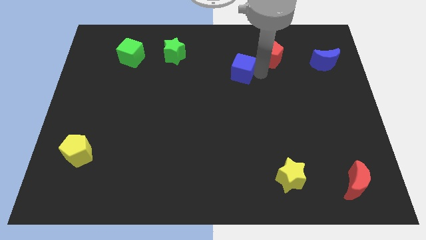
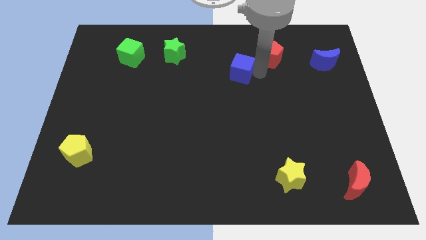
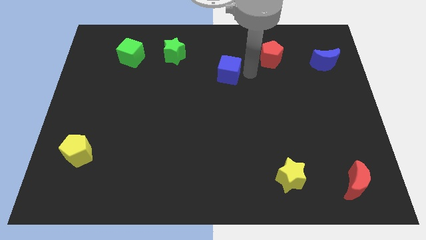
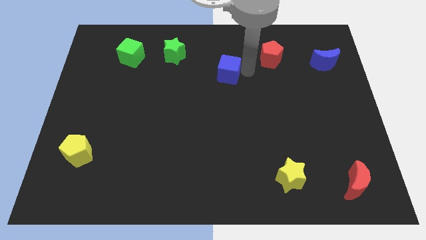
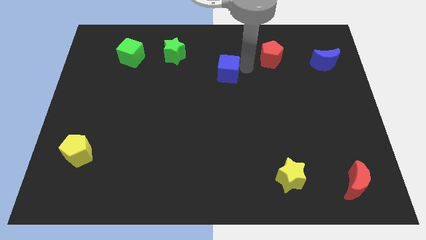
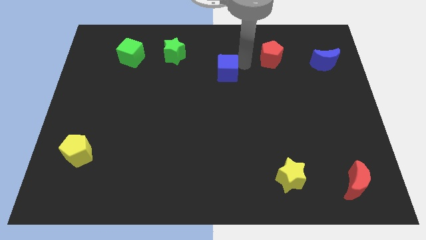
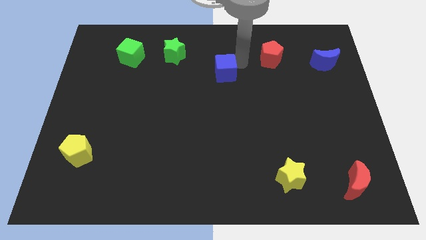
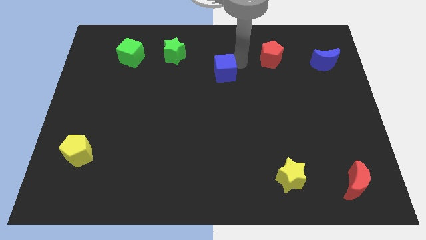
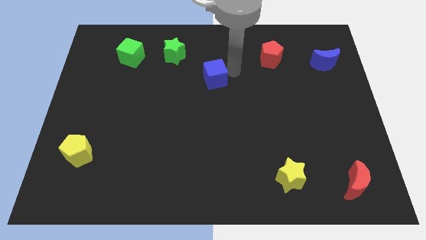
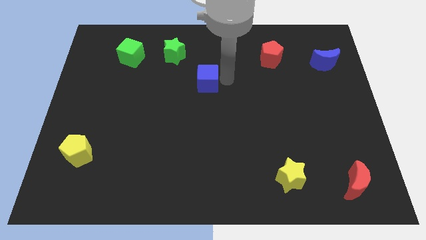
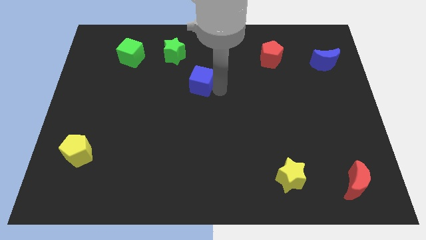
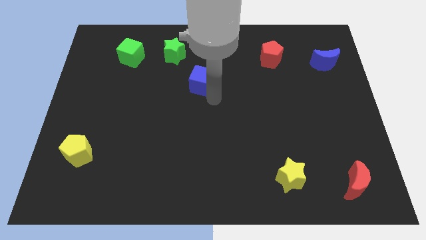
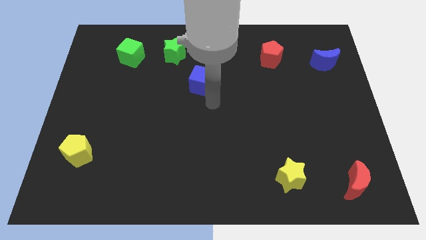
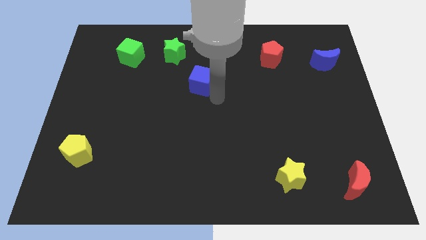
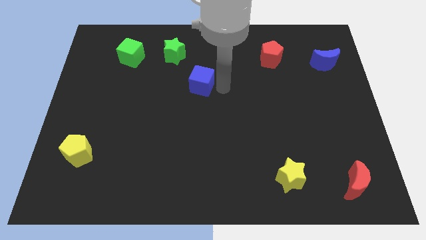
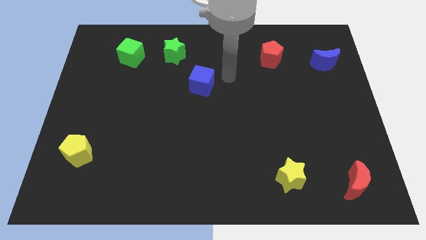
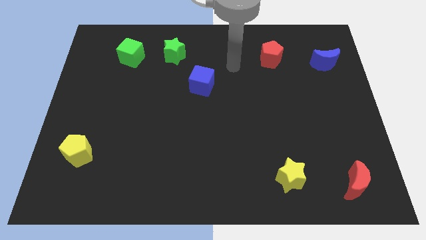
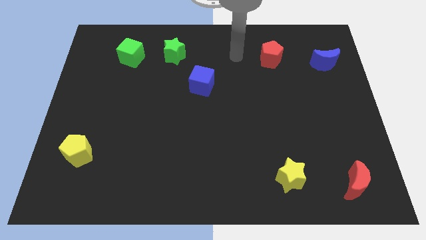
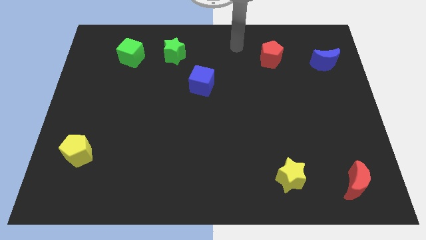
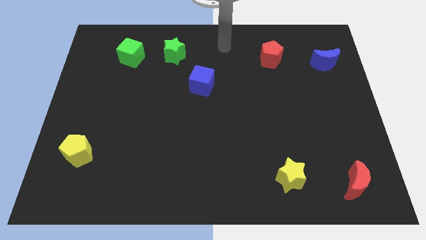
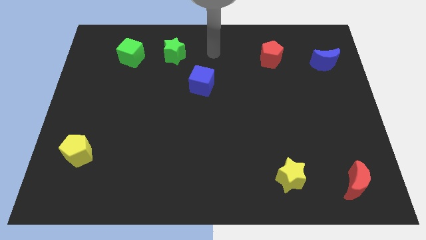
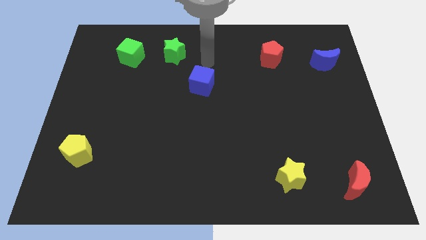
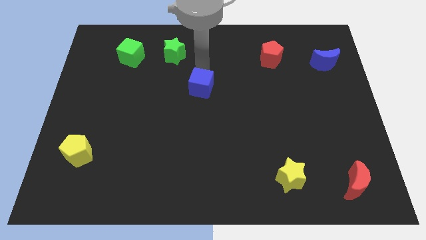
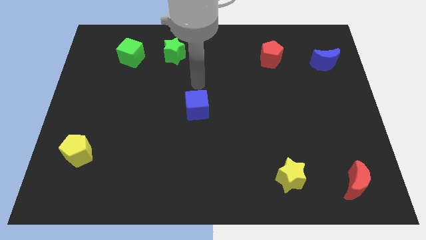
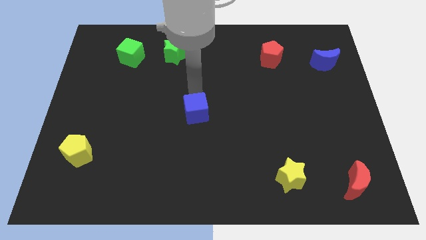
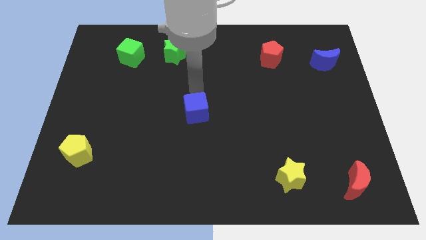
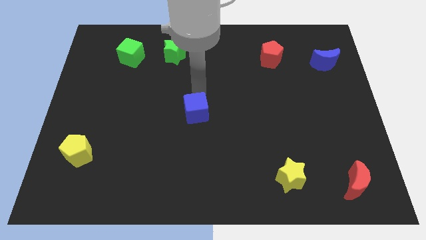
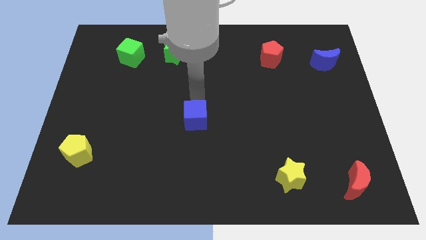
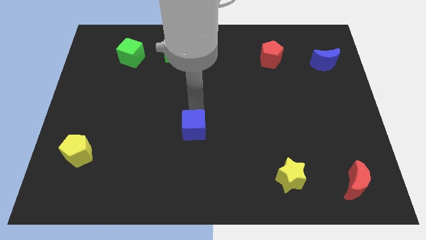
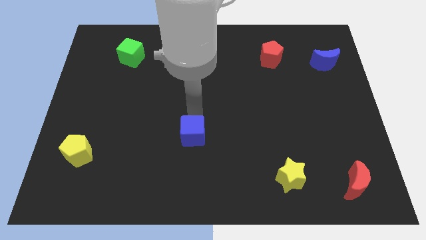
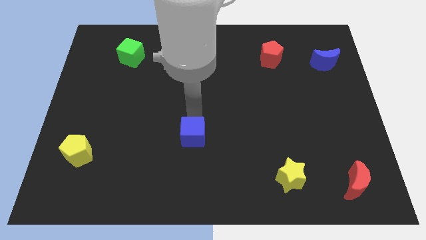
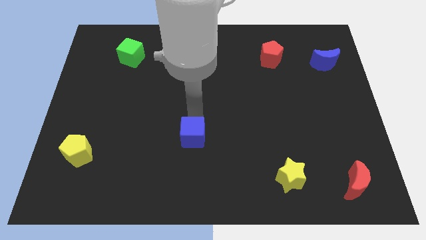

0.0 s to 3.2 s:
push the blue cube to the center of the board

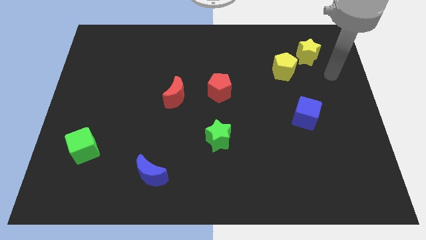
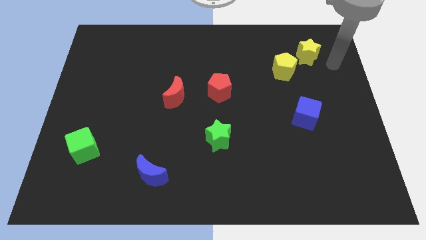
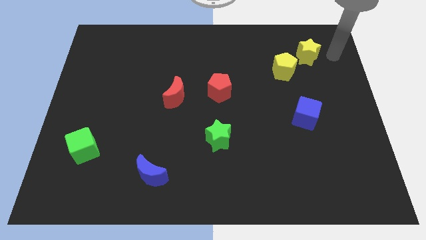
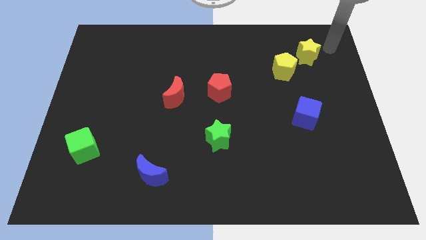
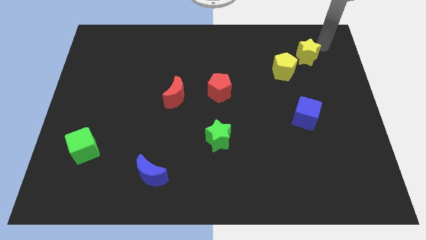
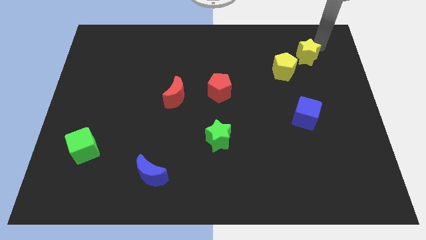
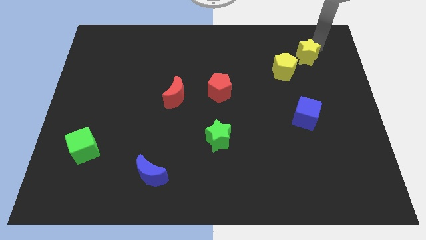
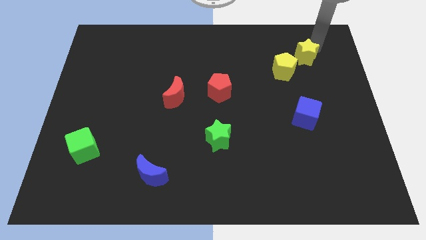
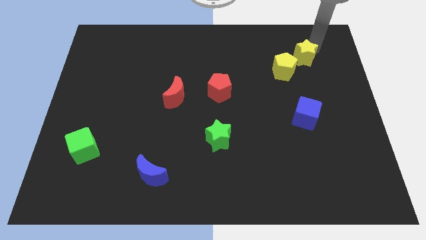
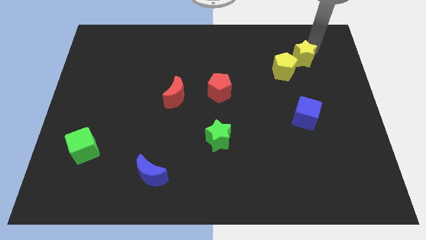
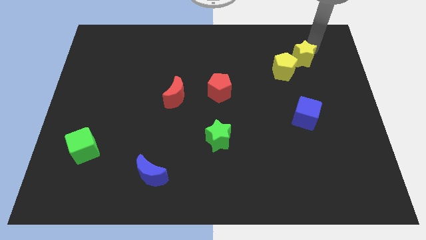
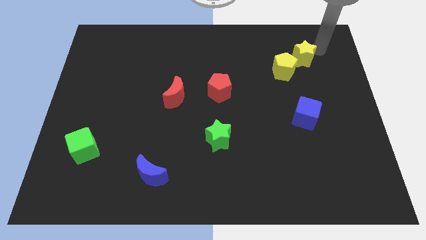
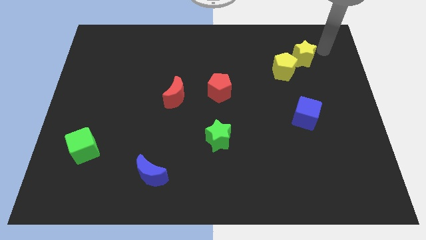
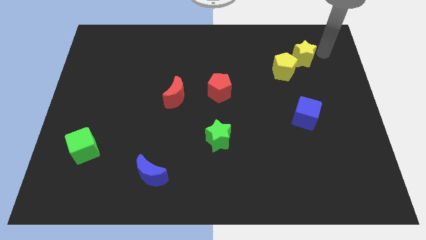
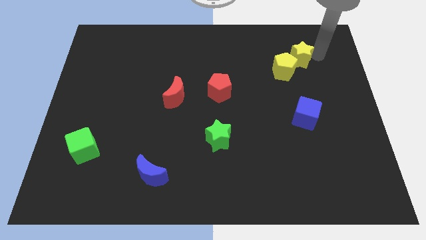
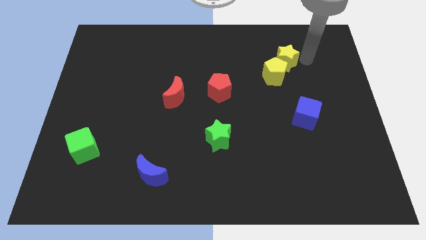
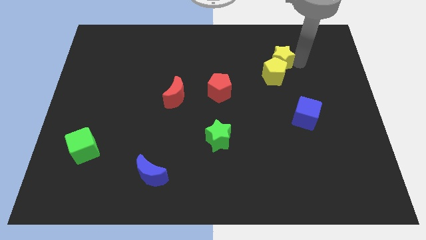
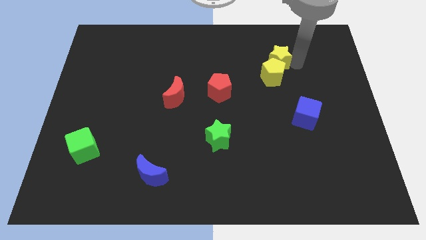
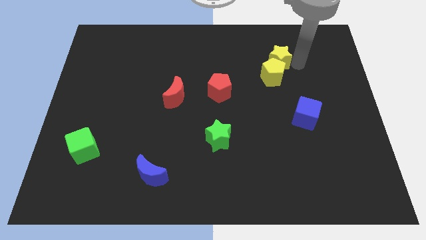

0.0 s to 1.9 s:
push the yellow star into the yellow pentagon

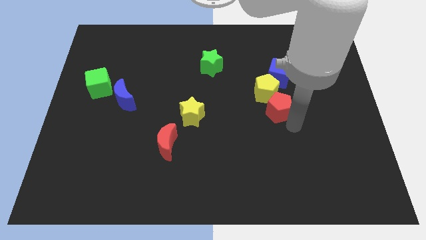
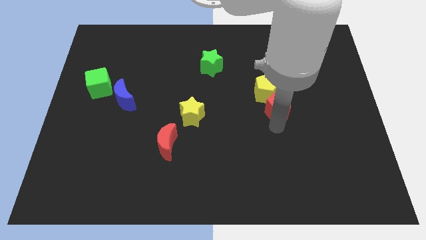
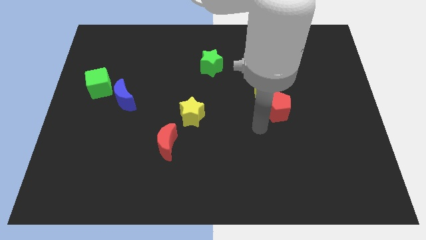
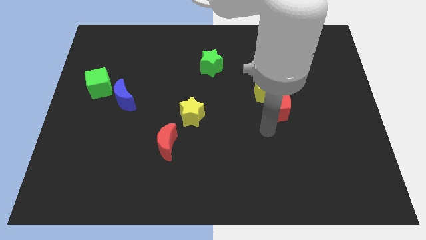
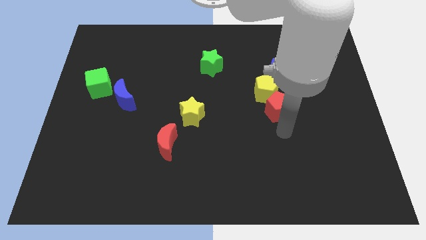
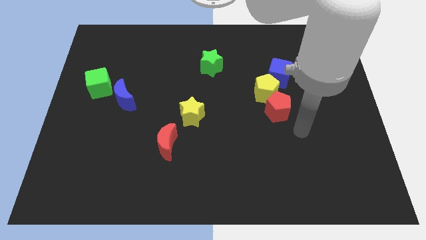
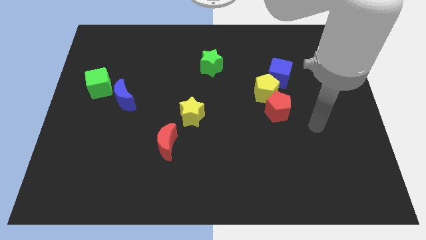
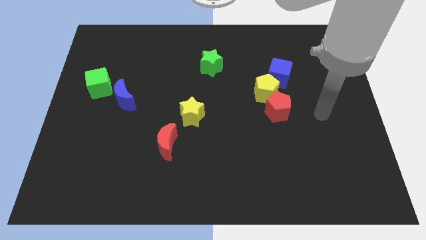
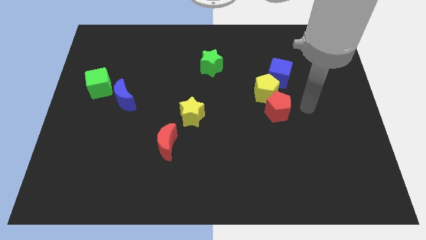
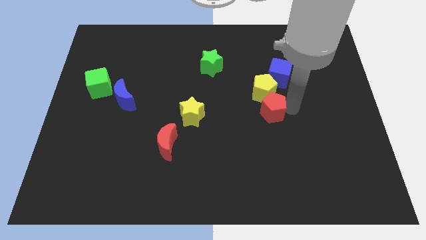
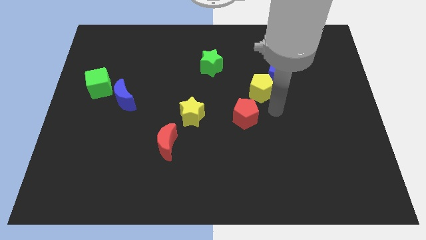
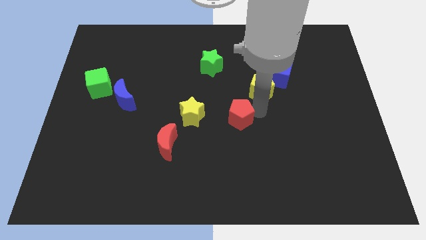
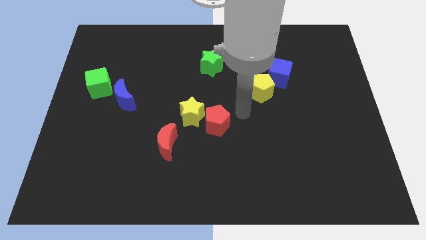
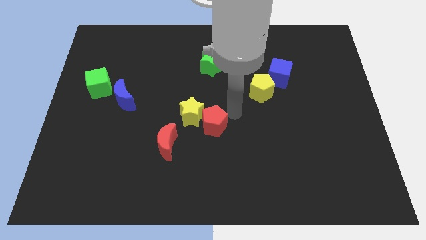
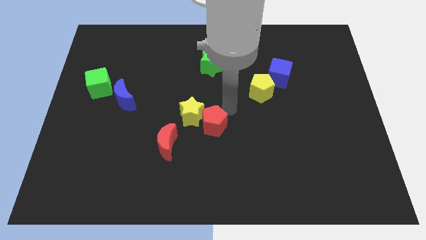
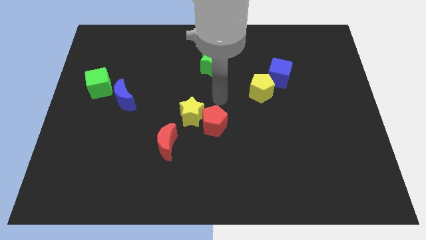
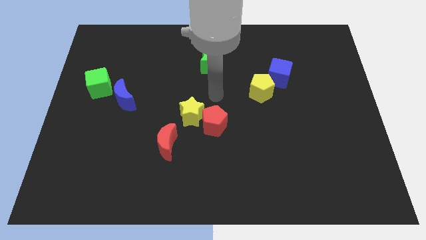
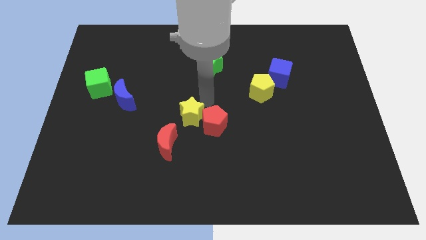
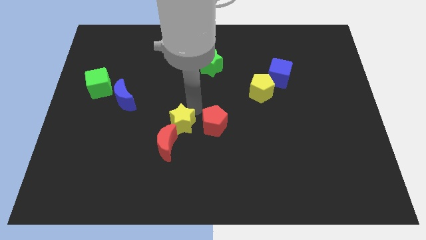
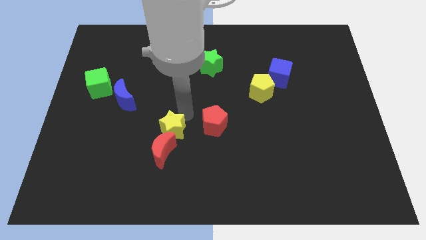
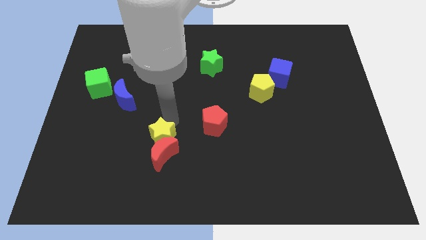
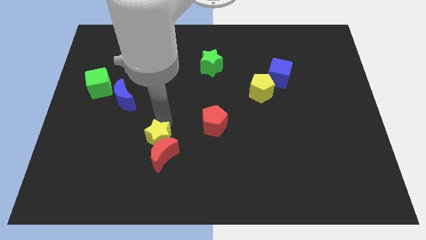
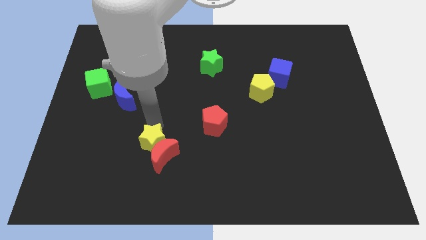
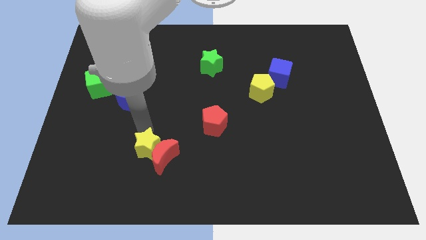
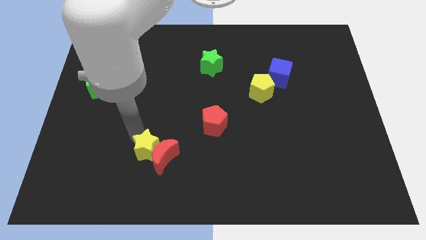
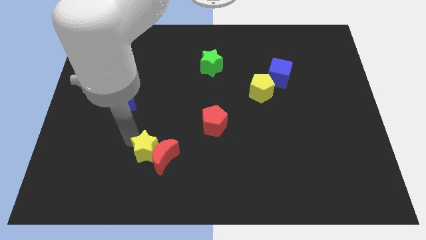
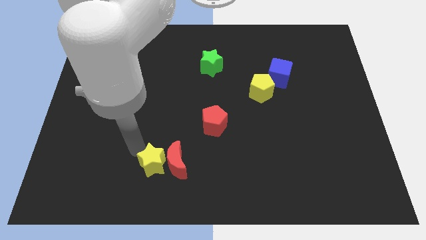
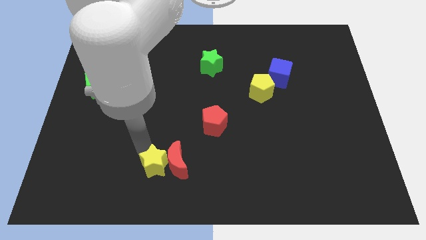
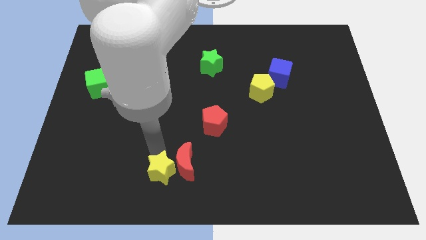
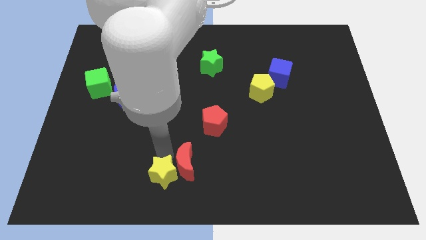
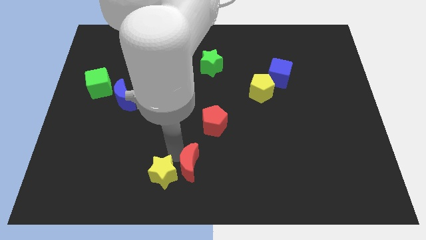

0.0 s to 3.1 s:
place the red pentagon at right side of the yellow star

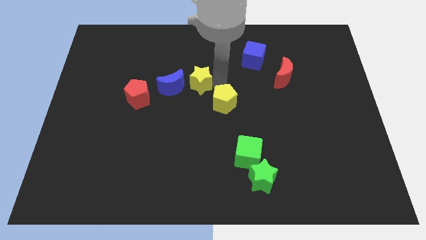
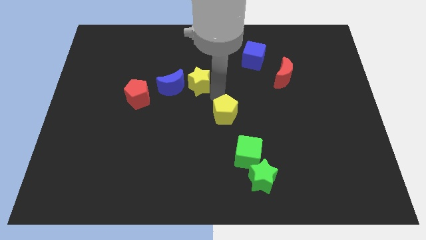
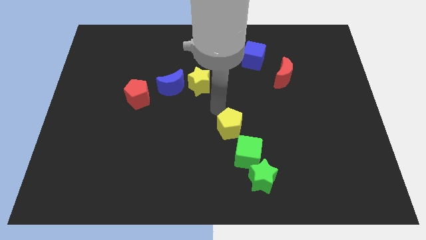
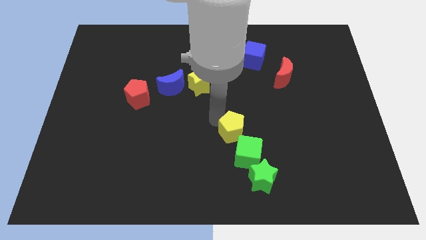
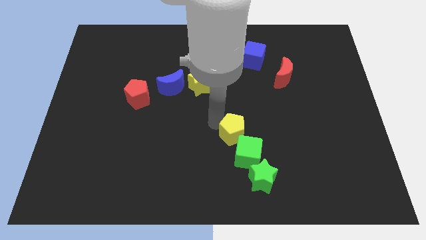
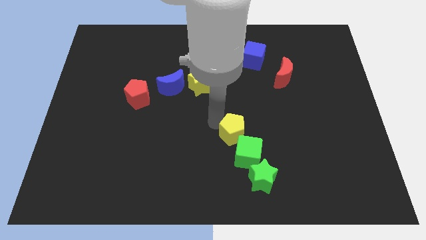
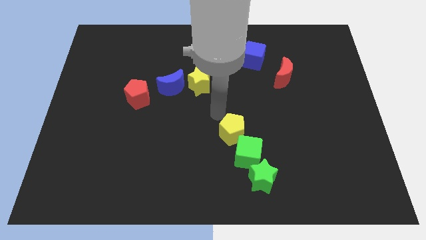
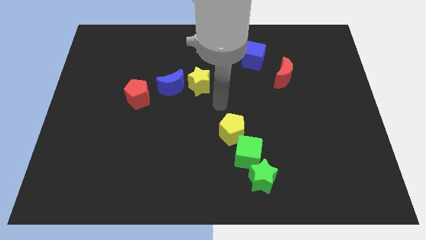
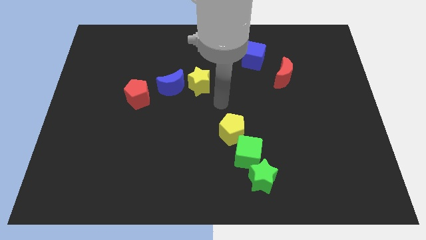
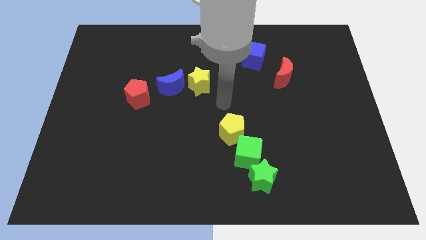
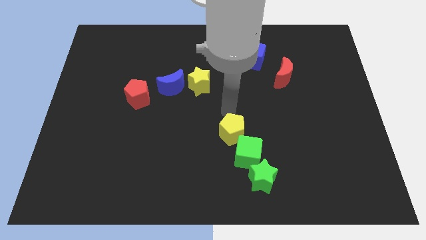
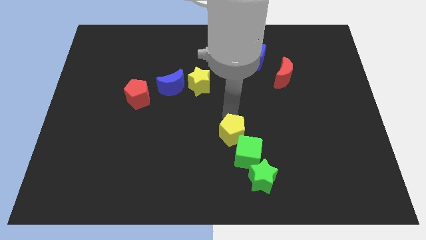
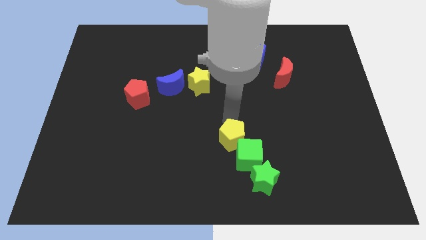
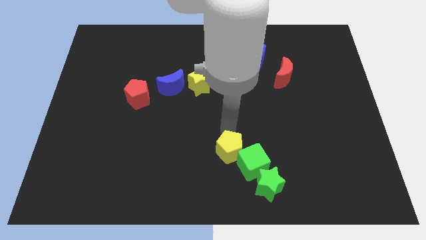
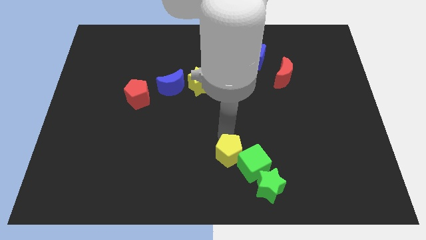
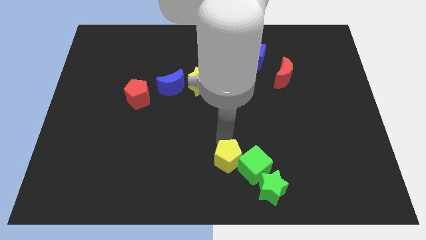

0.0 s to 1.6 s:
push the yellow pentagon into the green cube and green star
